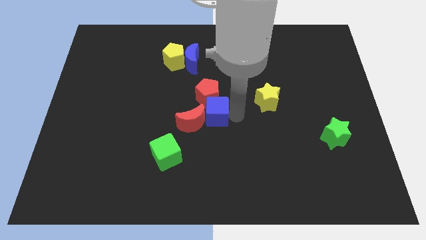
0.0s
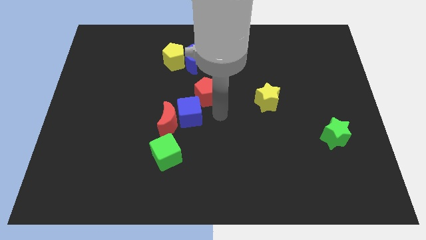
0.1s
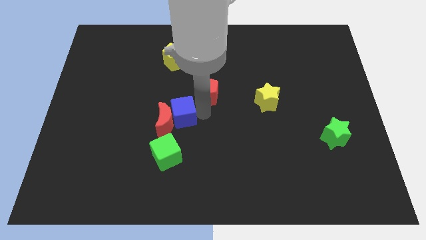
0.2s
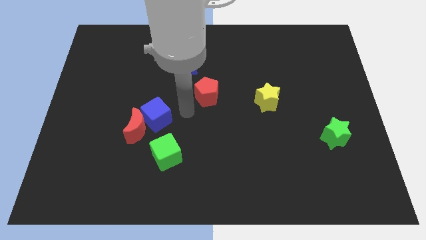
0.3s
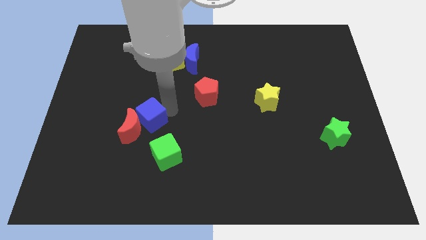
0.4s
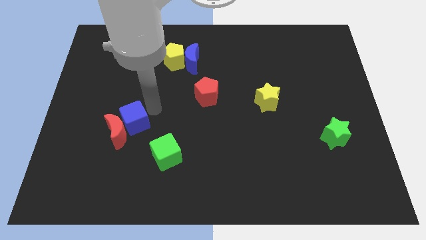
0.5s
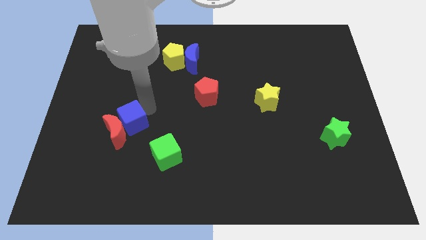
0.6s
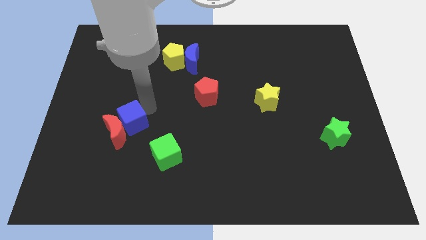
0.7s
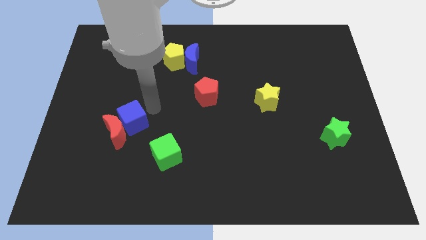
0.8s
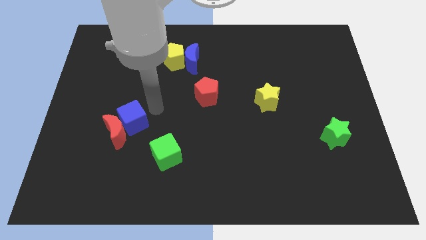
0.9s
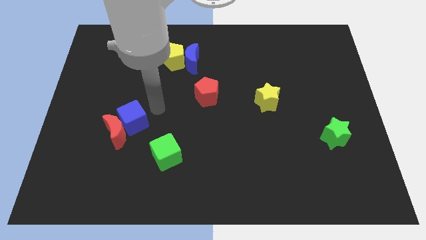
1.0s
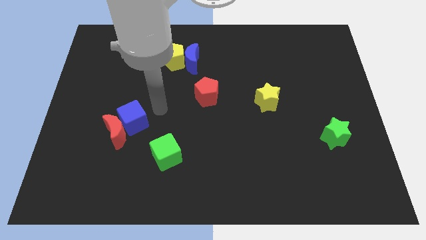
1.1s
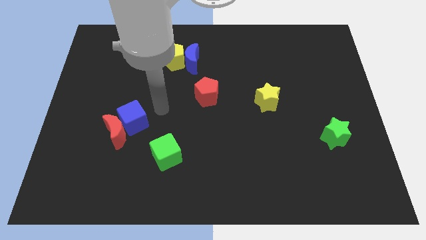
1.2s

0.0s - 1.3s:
push the blue cube and red moon towards the left side of the board

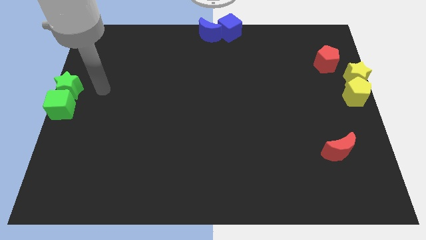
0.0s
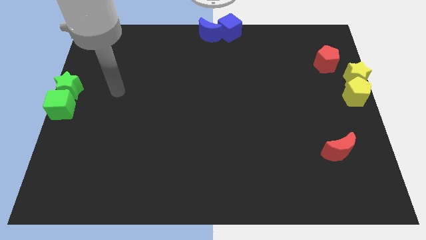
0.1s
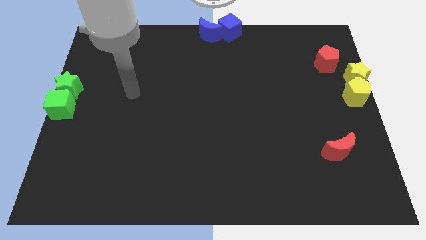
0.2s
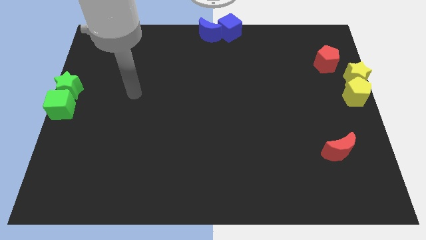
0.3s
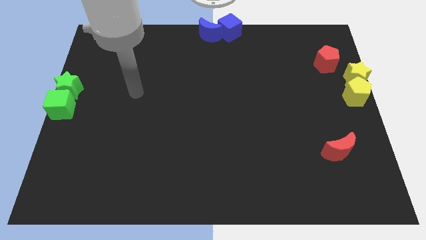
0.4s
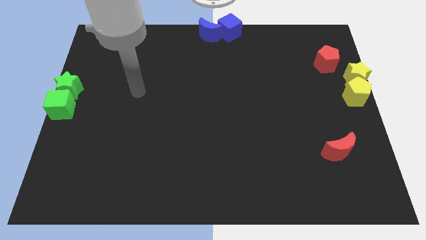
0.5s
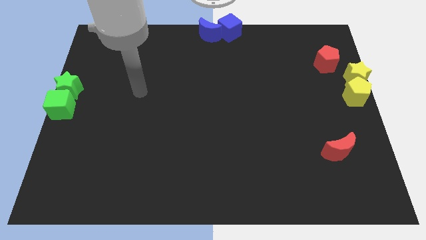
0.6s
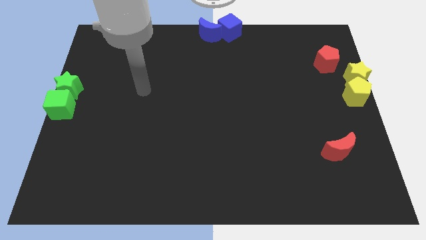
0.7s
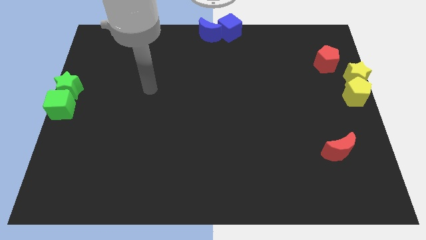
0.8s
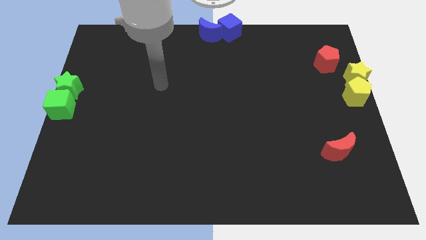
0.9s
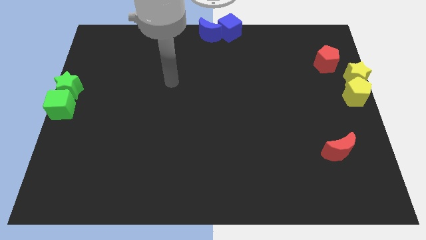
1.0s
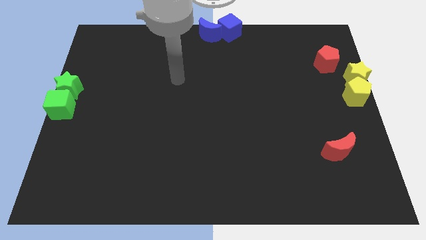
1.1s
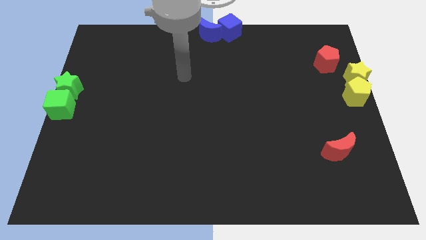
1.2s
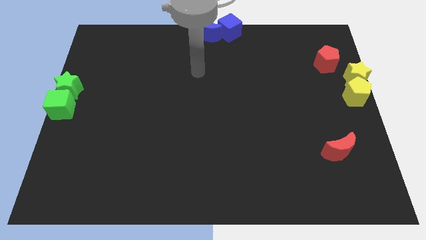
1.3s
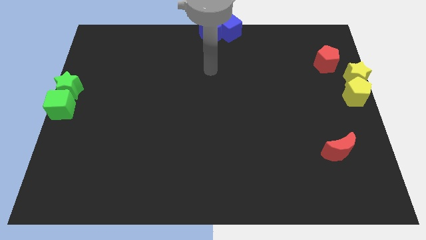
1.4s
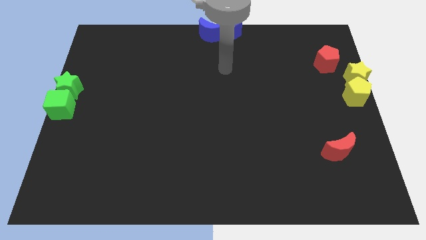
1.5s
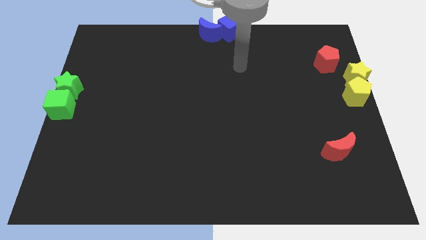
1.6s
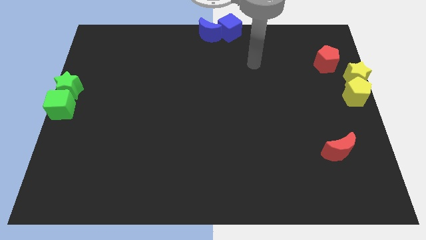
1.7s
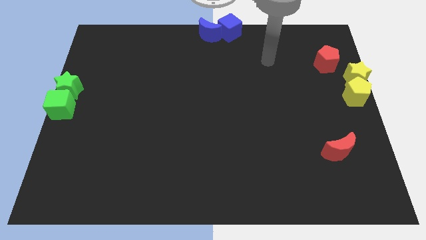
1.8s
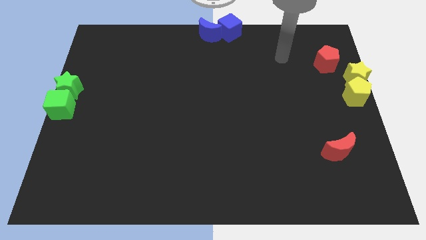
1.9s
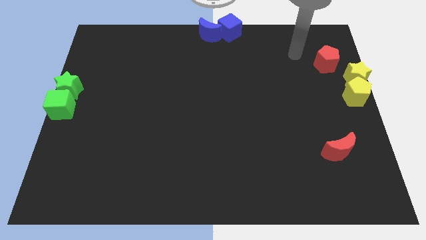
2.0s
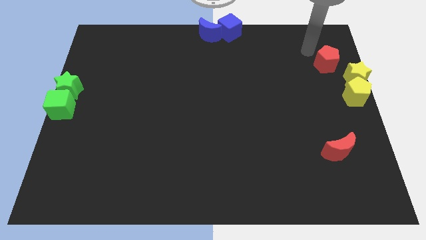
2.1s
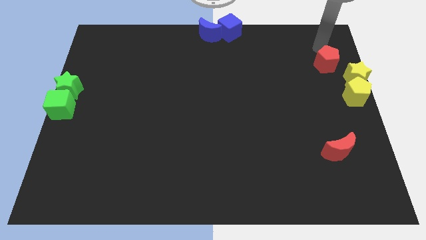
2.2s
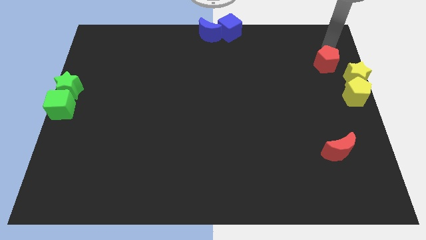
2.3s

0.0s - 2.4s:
place the arm on top of the red pentagon

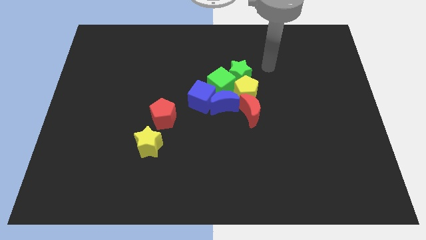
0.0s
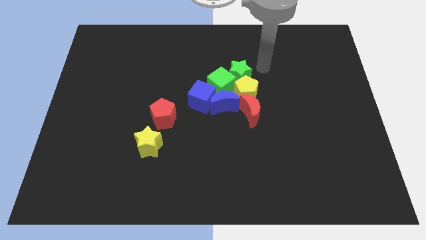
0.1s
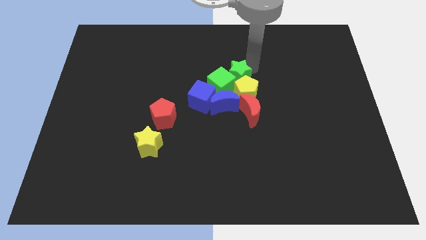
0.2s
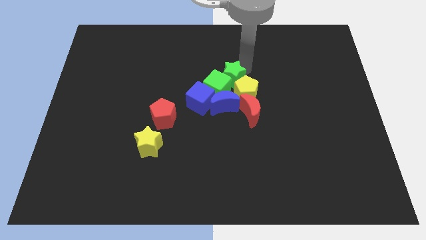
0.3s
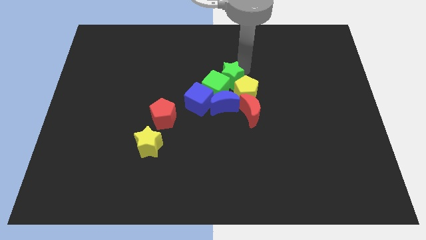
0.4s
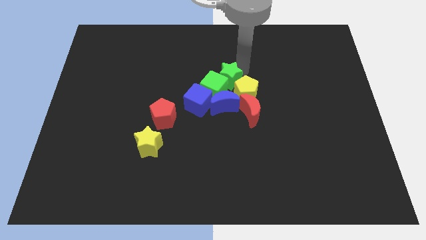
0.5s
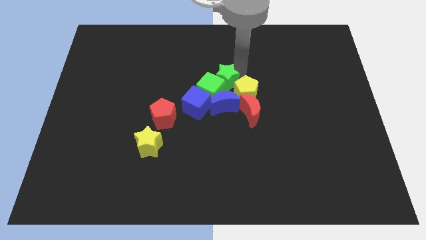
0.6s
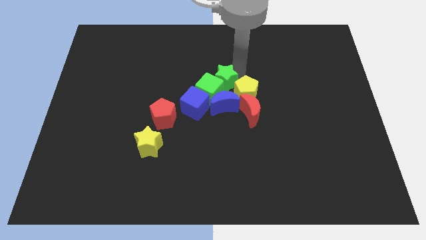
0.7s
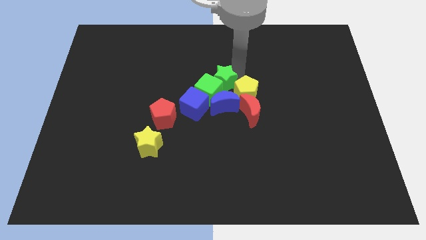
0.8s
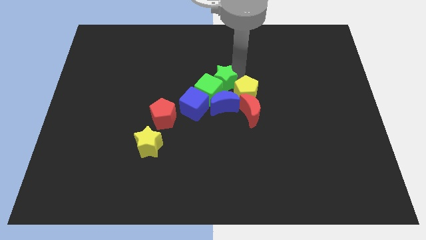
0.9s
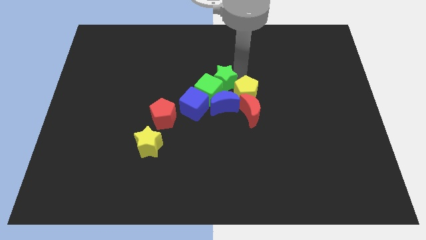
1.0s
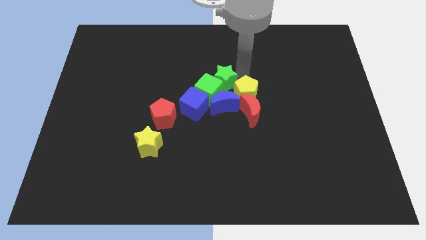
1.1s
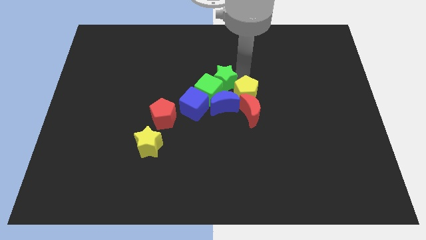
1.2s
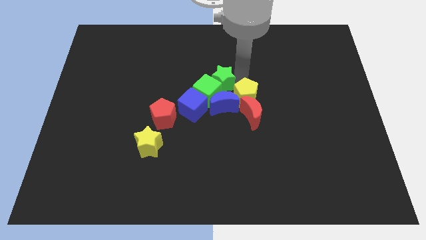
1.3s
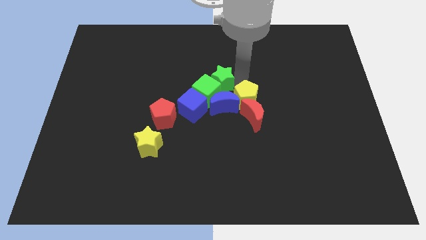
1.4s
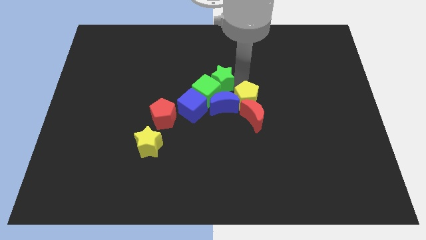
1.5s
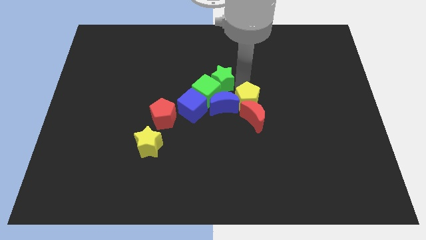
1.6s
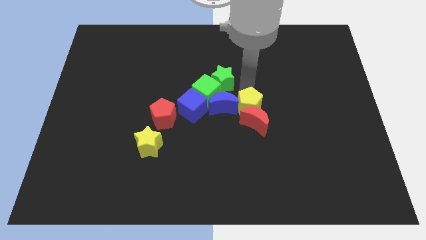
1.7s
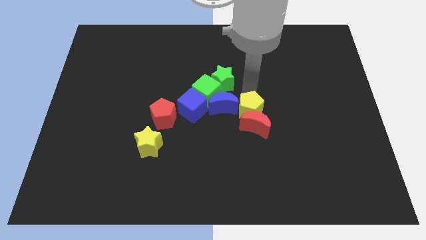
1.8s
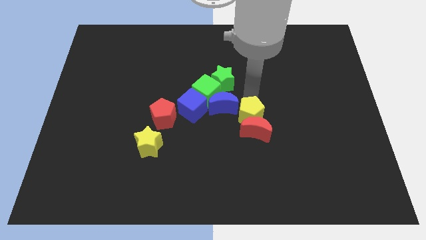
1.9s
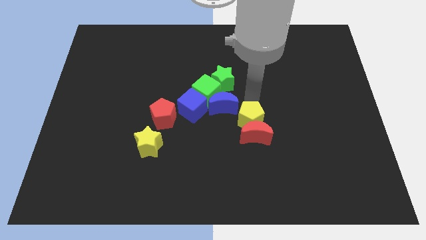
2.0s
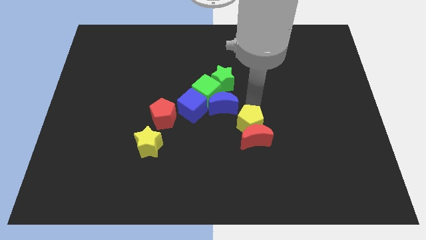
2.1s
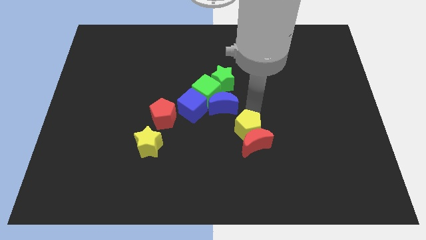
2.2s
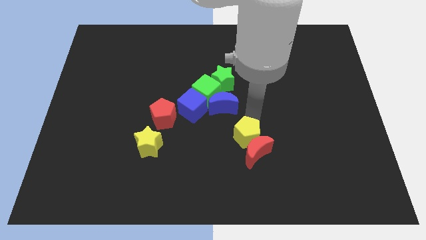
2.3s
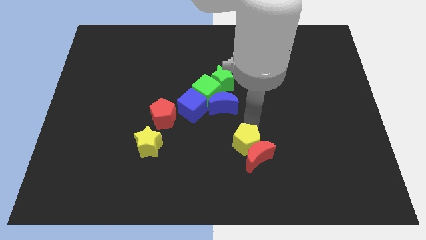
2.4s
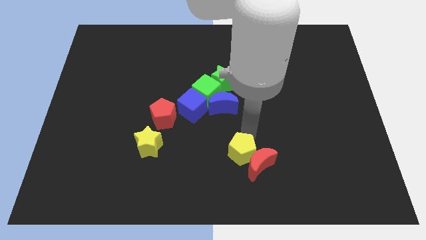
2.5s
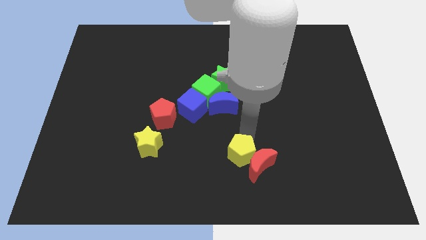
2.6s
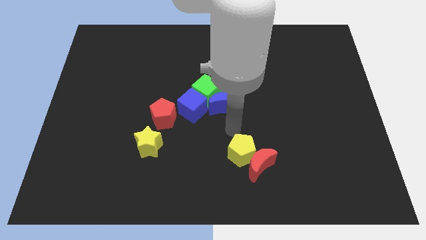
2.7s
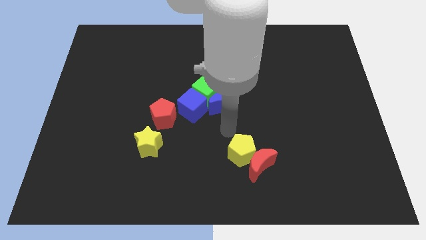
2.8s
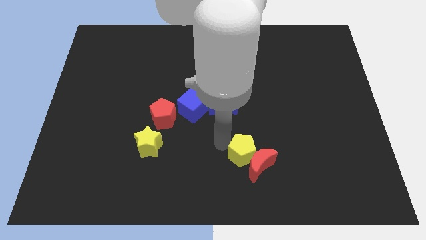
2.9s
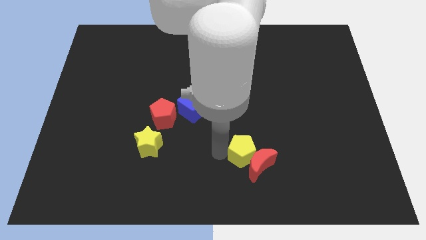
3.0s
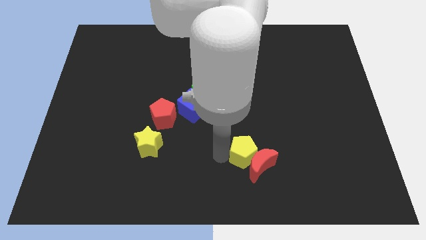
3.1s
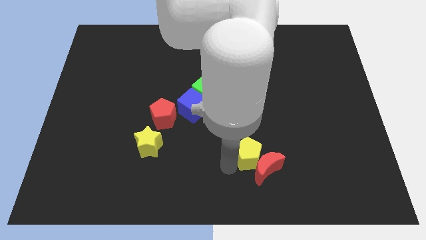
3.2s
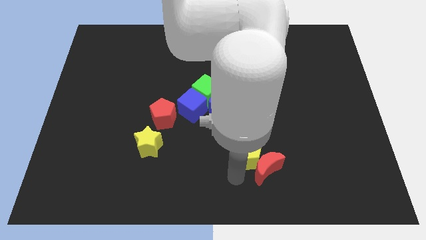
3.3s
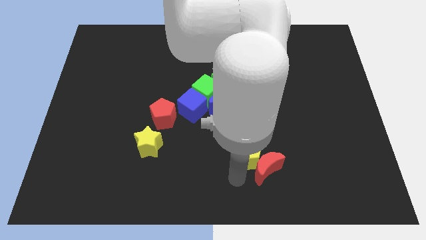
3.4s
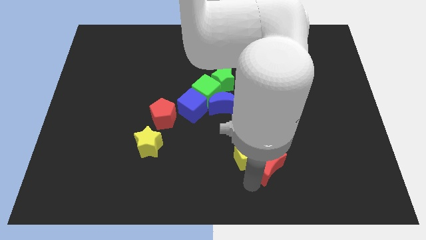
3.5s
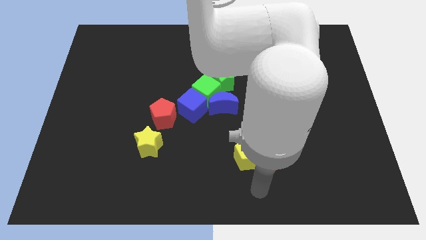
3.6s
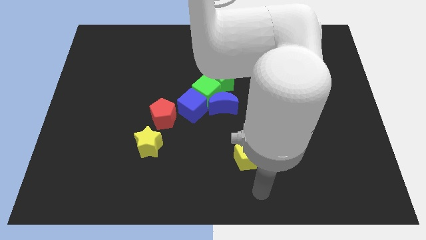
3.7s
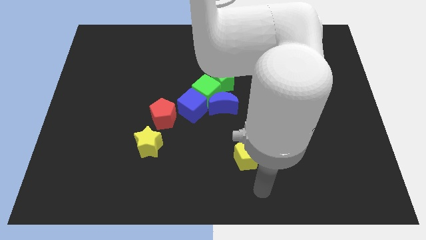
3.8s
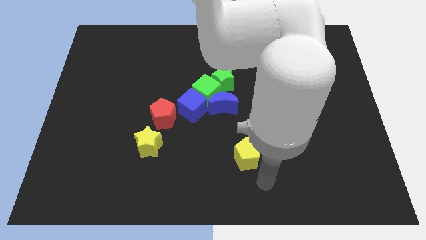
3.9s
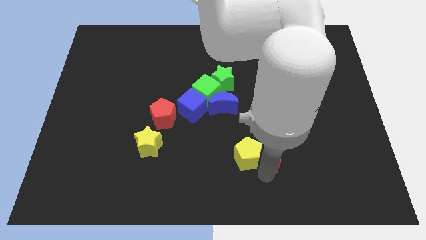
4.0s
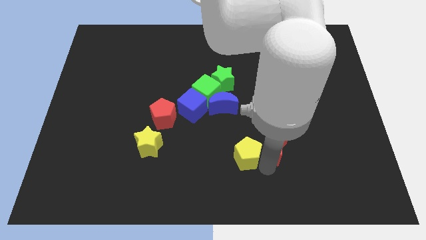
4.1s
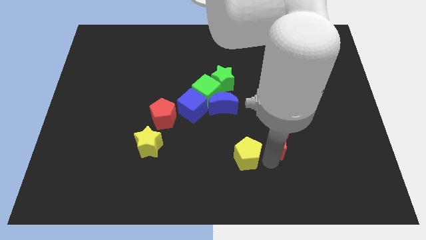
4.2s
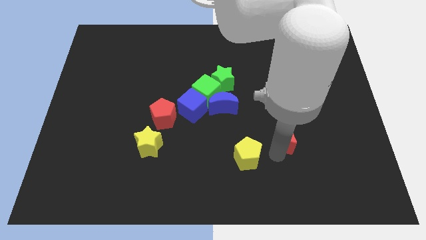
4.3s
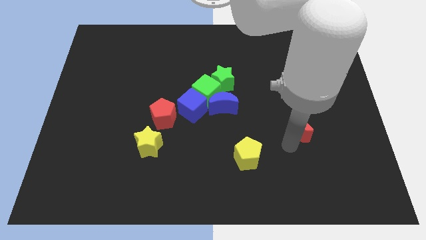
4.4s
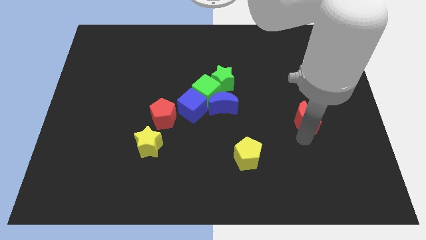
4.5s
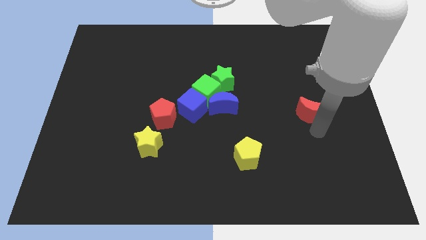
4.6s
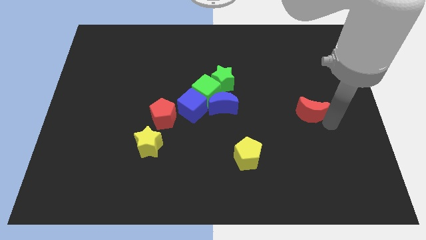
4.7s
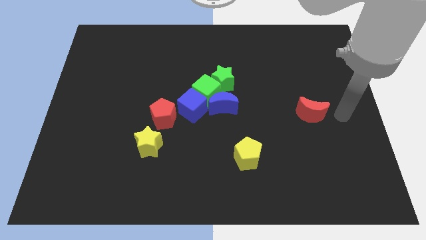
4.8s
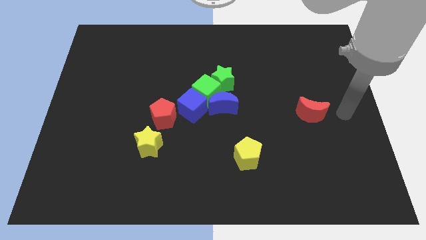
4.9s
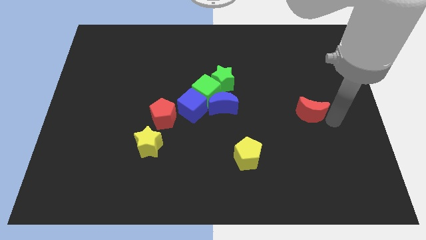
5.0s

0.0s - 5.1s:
separate the red crescent from the yellow pentagon

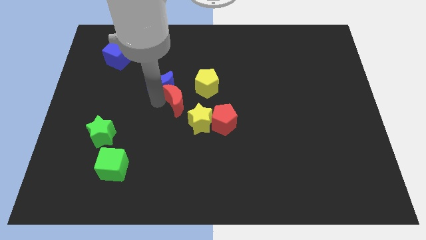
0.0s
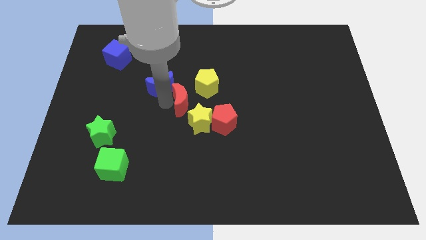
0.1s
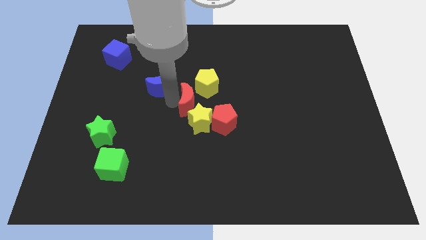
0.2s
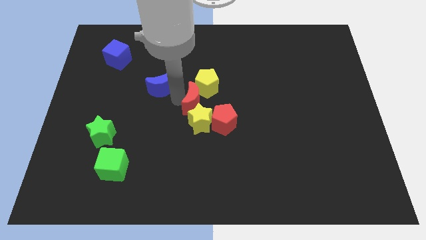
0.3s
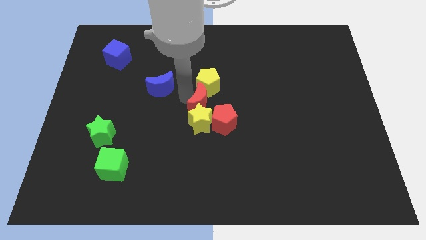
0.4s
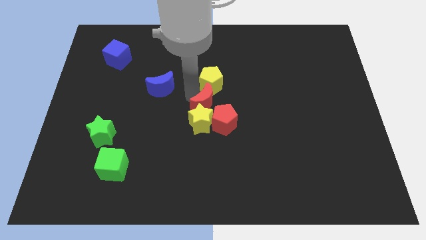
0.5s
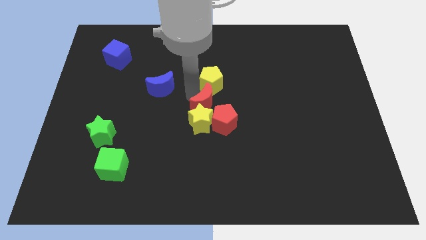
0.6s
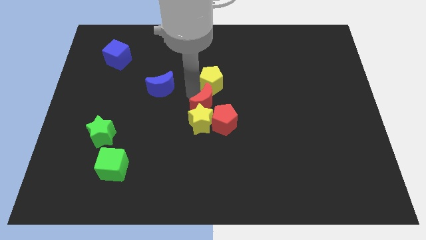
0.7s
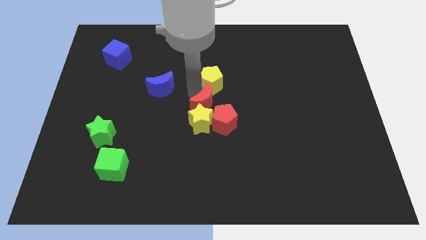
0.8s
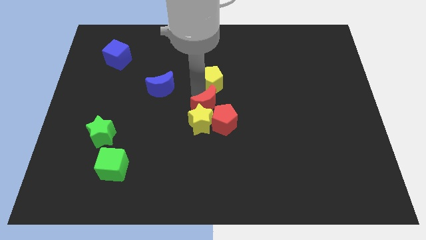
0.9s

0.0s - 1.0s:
place the red crescent in between the yellow blocks
